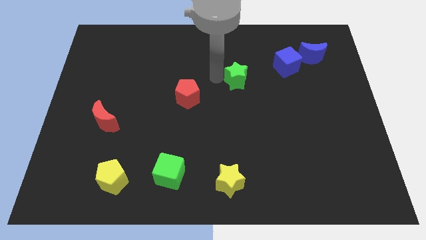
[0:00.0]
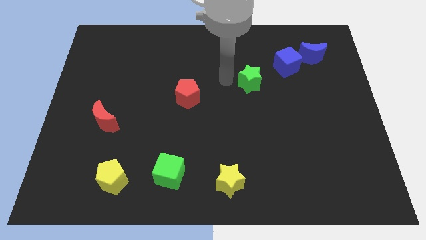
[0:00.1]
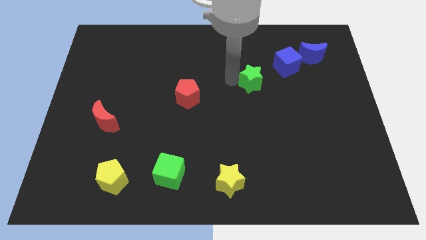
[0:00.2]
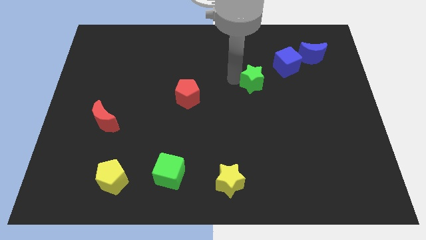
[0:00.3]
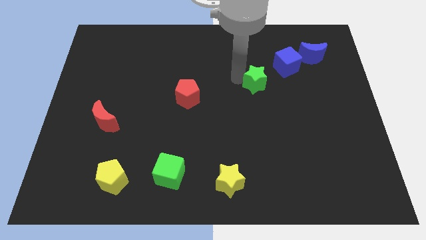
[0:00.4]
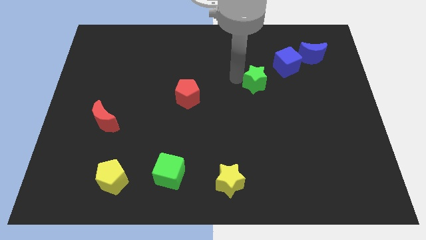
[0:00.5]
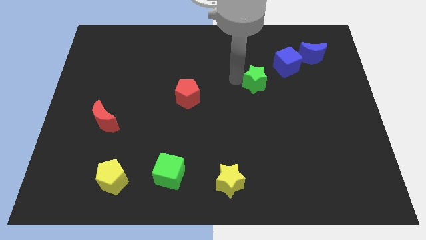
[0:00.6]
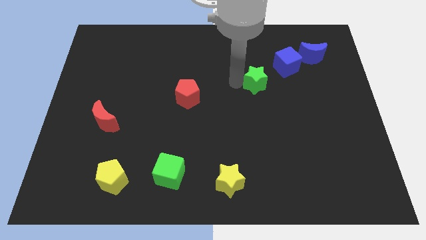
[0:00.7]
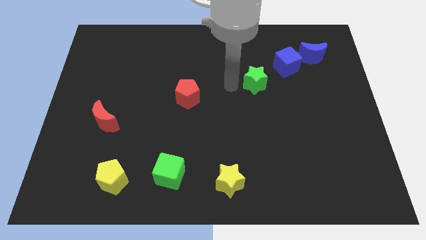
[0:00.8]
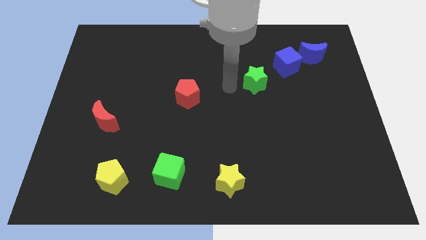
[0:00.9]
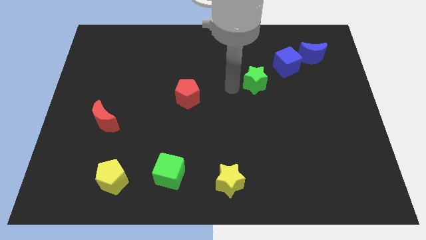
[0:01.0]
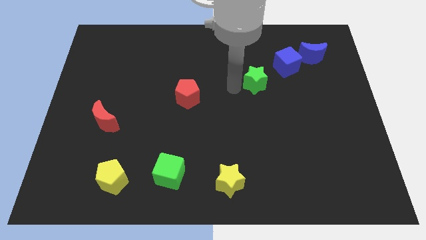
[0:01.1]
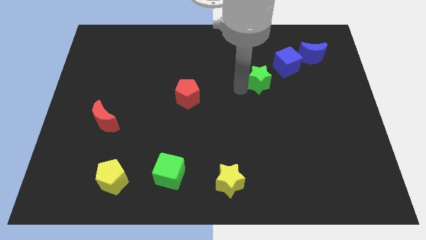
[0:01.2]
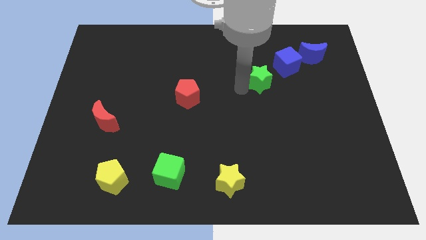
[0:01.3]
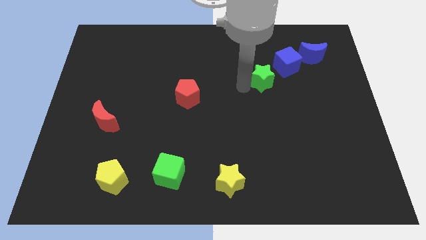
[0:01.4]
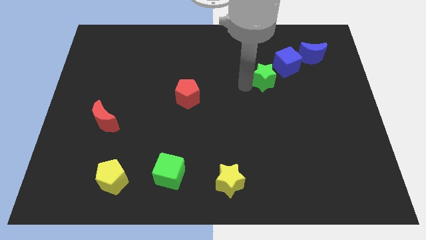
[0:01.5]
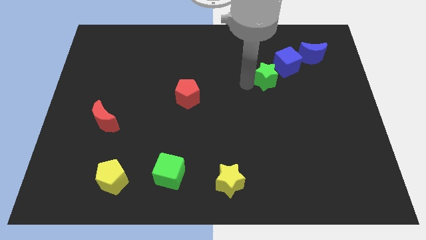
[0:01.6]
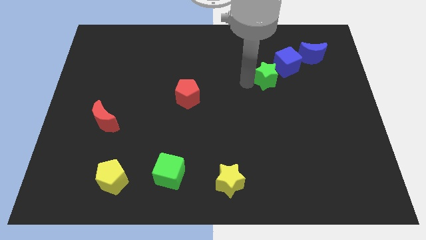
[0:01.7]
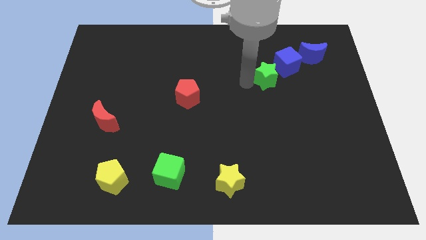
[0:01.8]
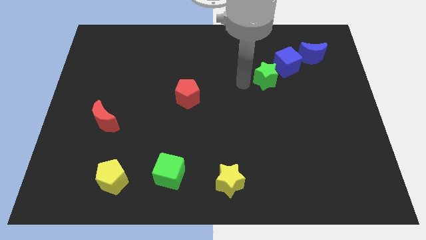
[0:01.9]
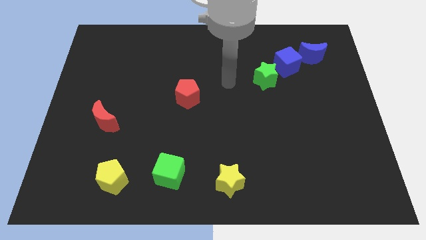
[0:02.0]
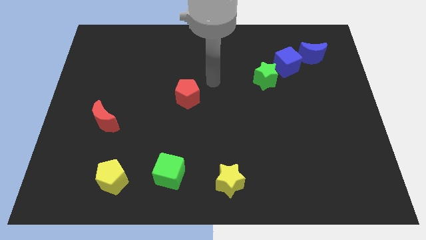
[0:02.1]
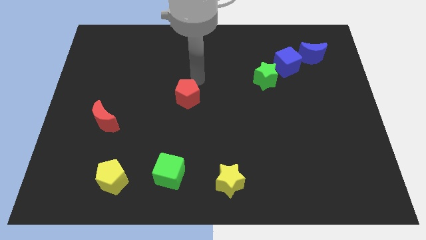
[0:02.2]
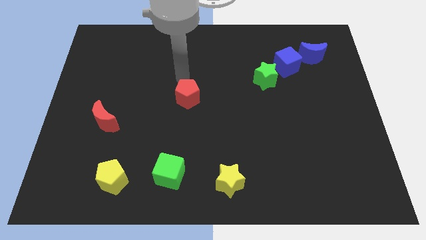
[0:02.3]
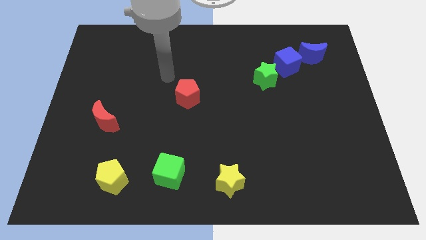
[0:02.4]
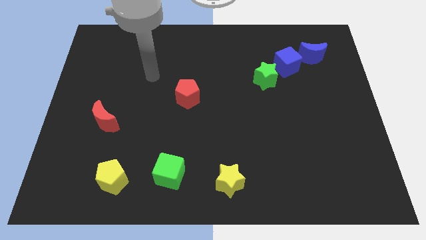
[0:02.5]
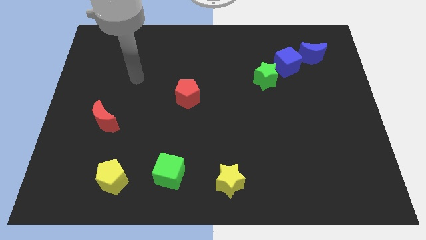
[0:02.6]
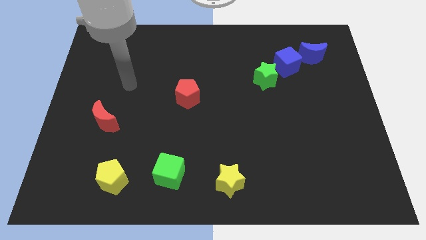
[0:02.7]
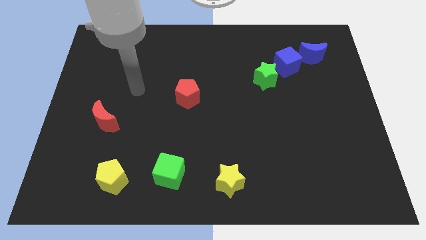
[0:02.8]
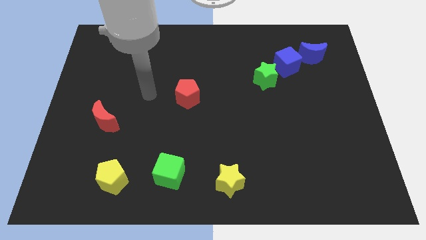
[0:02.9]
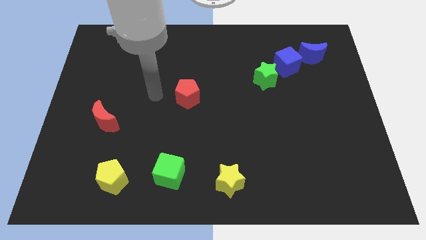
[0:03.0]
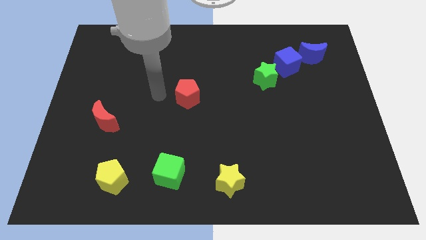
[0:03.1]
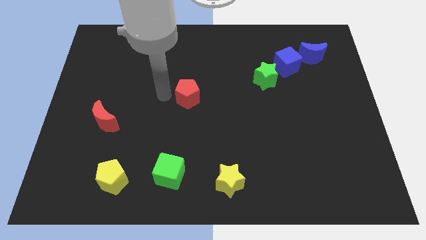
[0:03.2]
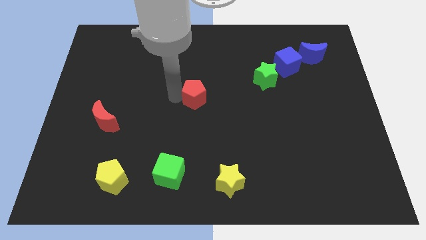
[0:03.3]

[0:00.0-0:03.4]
slide the green star diagonally top right to red pentagon

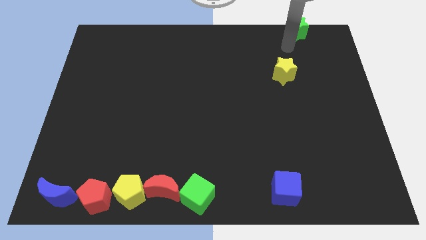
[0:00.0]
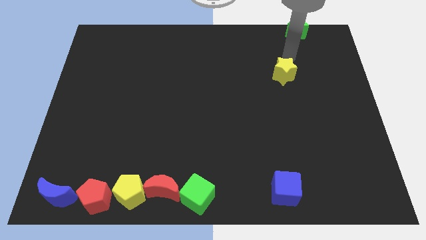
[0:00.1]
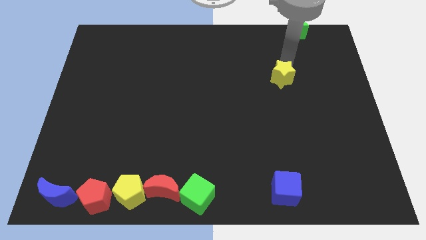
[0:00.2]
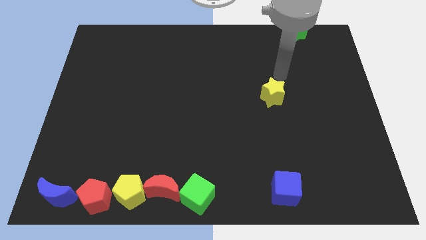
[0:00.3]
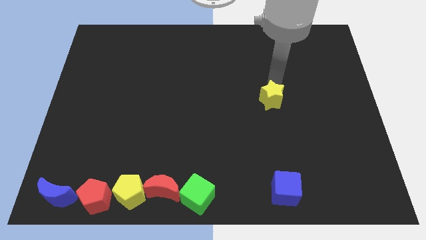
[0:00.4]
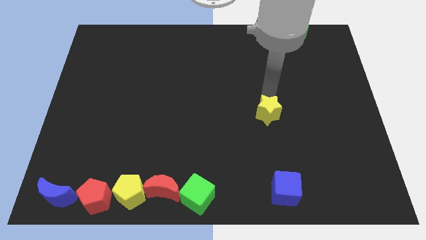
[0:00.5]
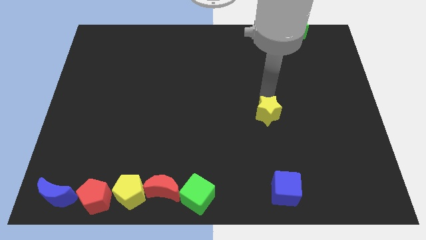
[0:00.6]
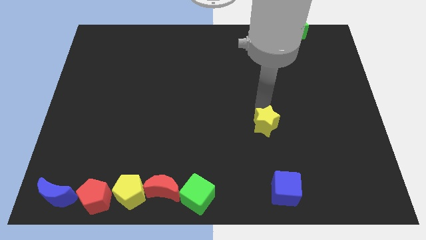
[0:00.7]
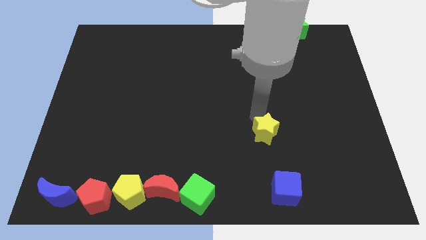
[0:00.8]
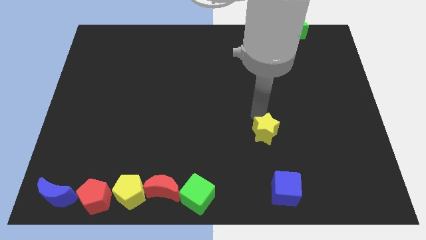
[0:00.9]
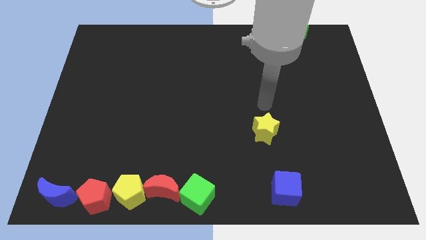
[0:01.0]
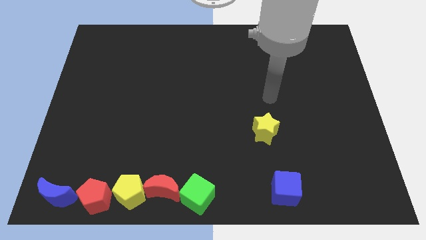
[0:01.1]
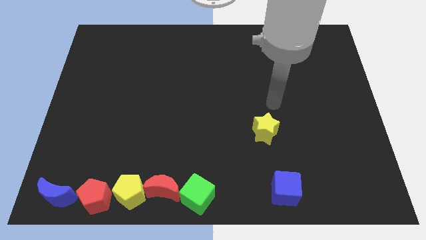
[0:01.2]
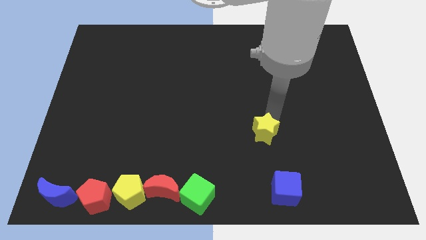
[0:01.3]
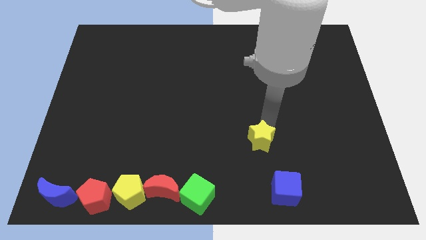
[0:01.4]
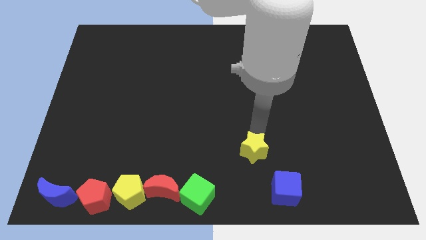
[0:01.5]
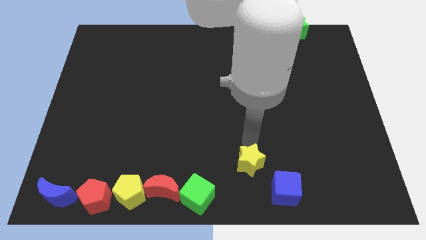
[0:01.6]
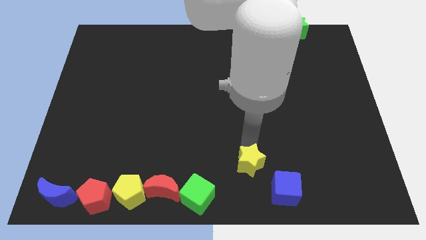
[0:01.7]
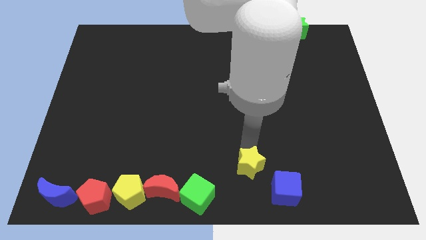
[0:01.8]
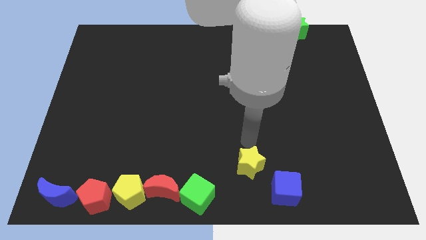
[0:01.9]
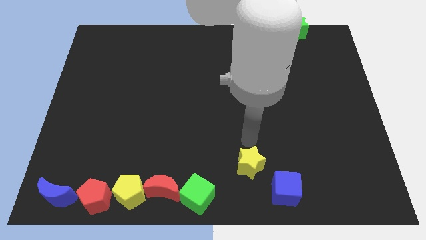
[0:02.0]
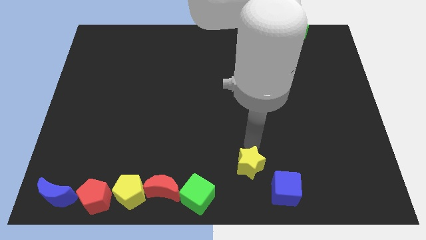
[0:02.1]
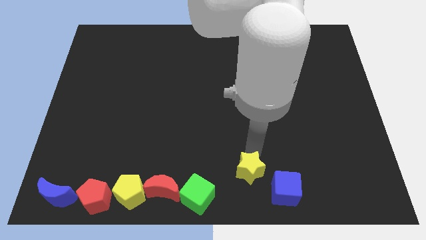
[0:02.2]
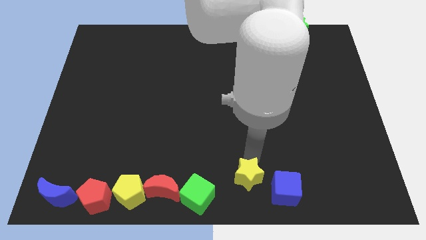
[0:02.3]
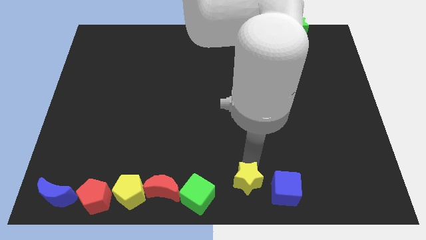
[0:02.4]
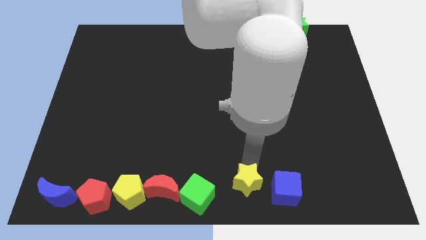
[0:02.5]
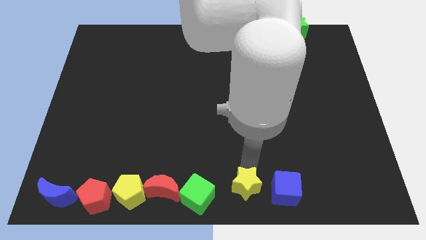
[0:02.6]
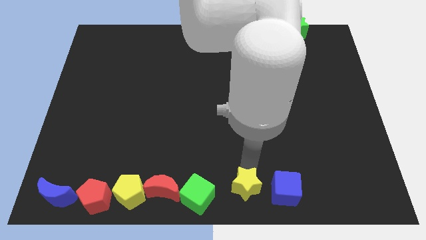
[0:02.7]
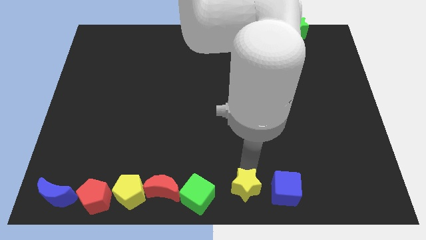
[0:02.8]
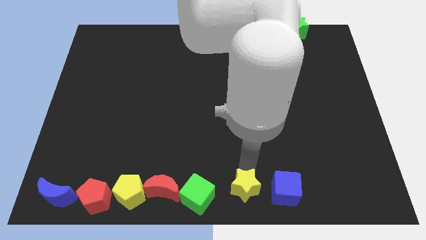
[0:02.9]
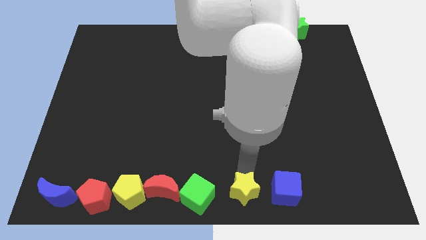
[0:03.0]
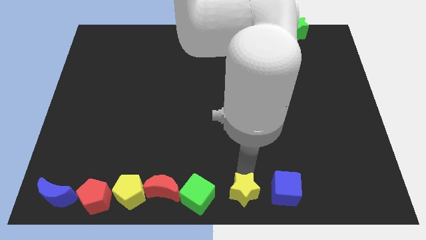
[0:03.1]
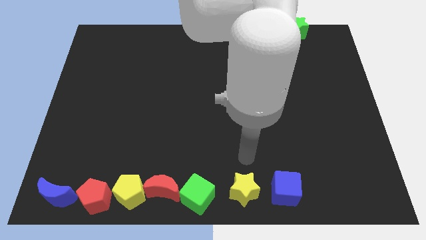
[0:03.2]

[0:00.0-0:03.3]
place yellow star between green block and blue block

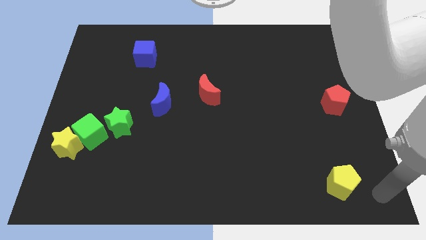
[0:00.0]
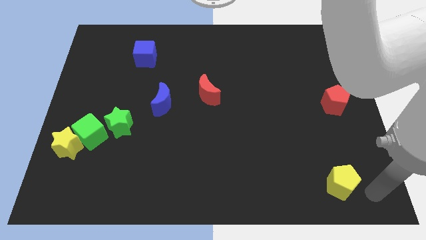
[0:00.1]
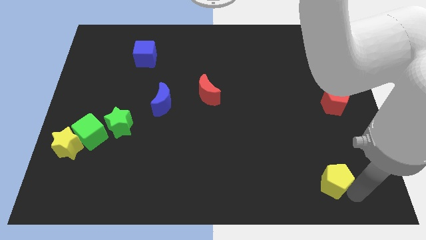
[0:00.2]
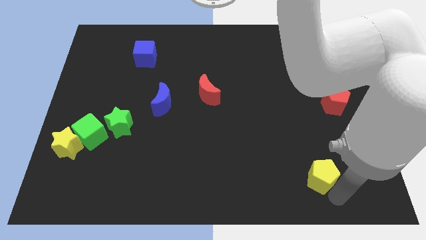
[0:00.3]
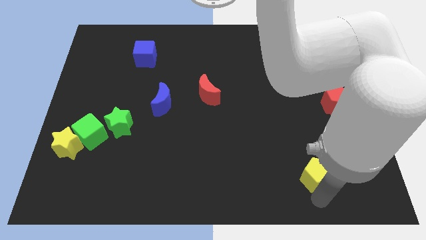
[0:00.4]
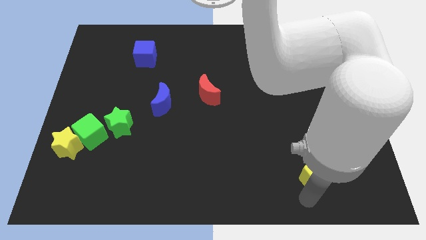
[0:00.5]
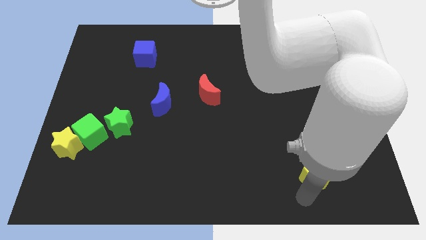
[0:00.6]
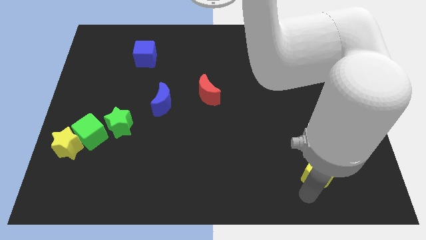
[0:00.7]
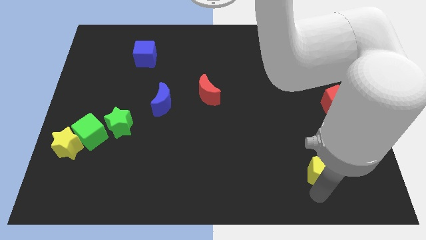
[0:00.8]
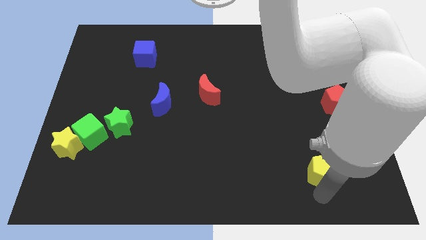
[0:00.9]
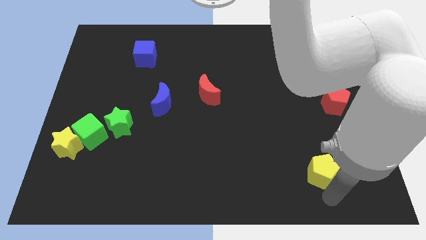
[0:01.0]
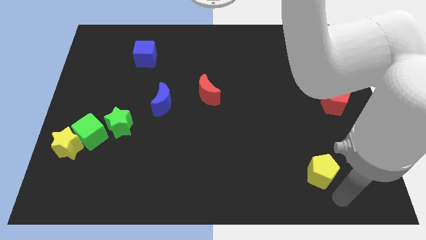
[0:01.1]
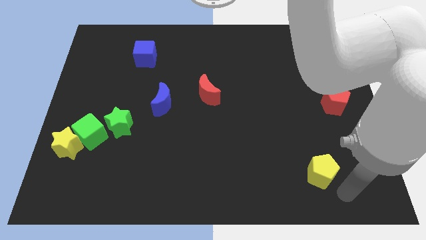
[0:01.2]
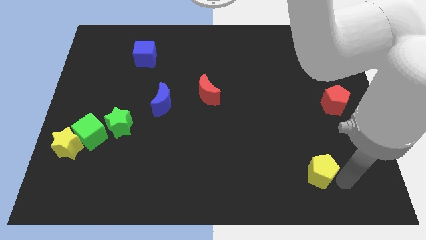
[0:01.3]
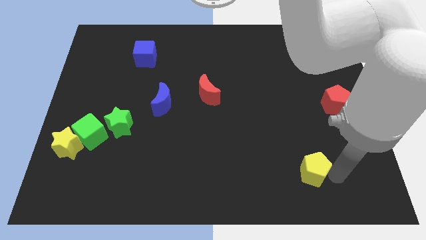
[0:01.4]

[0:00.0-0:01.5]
move yellow pentagon slightly left

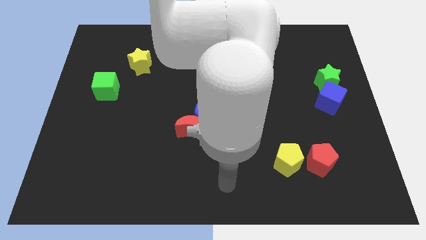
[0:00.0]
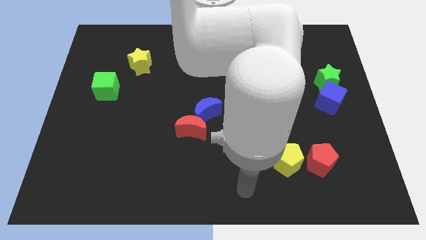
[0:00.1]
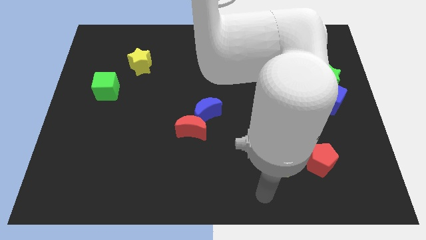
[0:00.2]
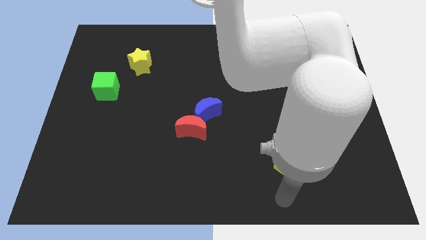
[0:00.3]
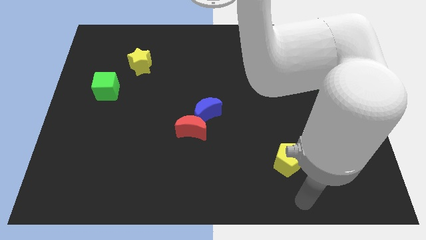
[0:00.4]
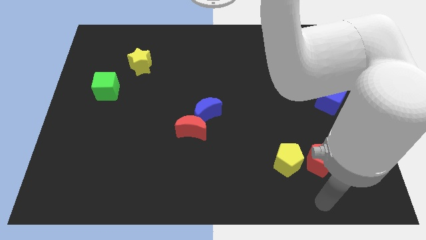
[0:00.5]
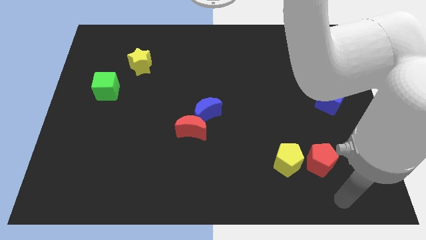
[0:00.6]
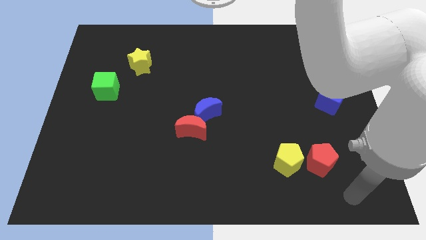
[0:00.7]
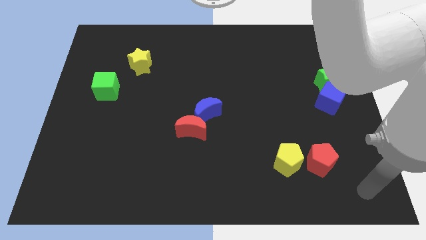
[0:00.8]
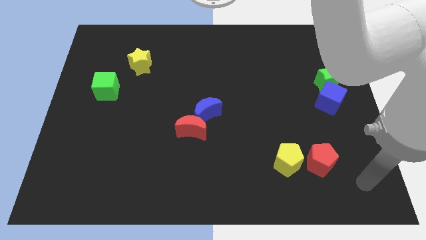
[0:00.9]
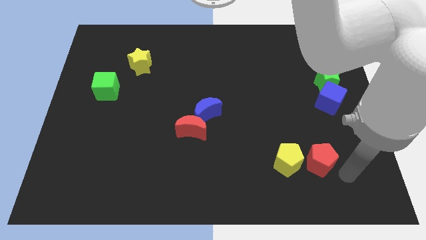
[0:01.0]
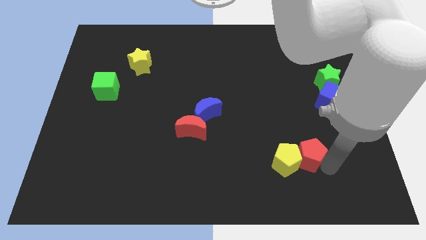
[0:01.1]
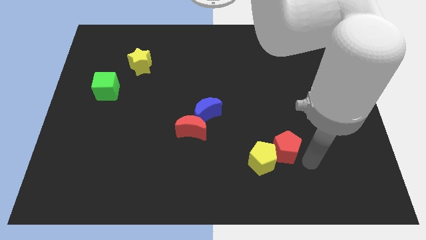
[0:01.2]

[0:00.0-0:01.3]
place the arm close to the red pentagon
